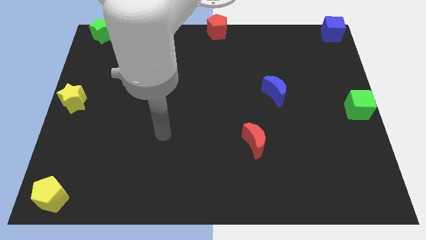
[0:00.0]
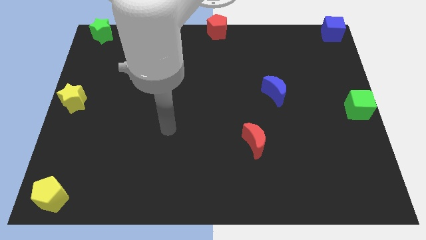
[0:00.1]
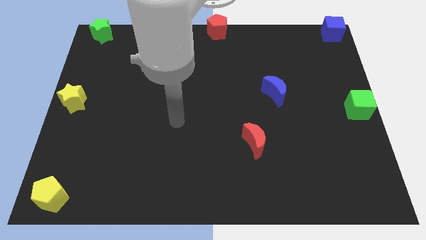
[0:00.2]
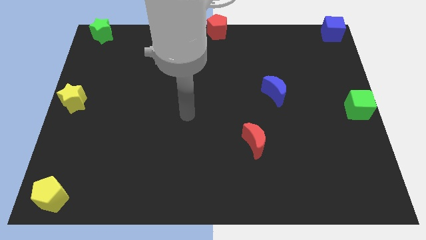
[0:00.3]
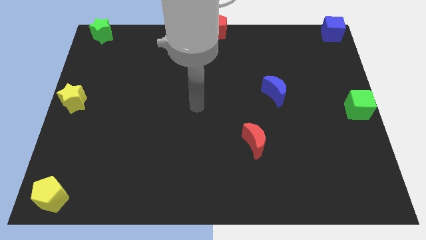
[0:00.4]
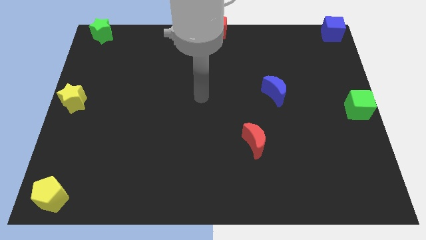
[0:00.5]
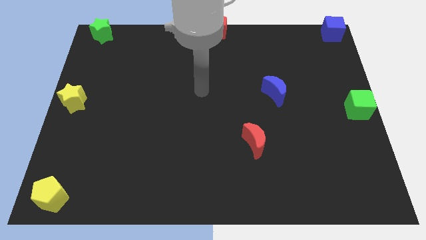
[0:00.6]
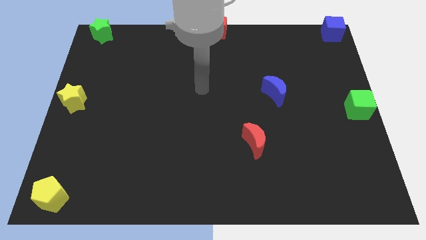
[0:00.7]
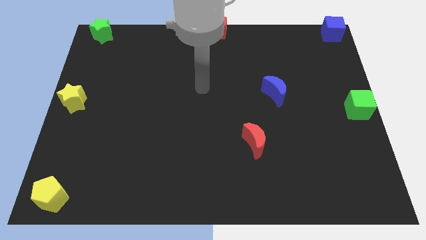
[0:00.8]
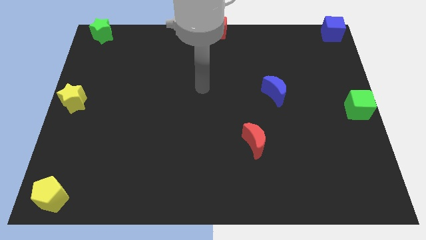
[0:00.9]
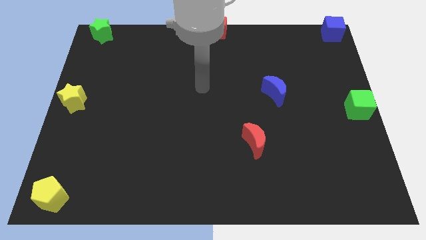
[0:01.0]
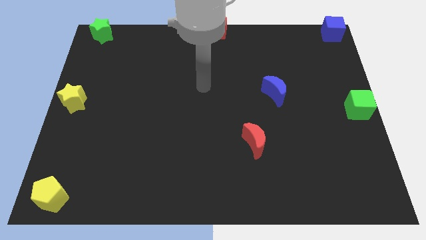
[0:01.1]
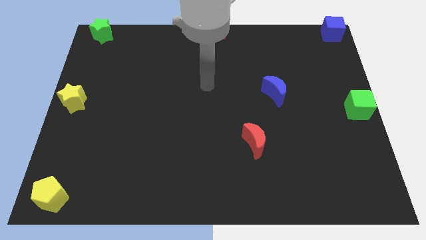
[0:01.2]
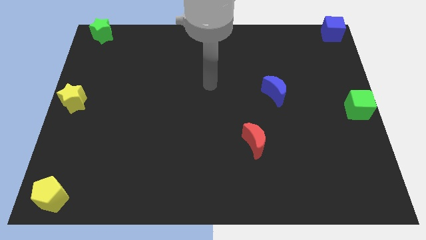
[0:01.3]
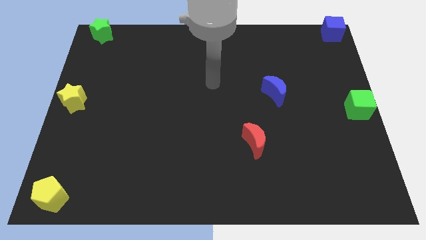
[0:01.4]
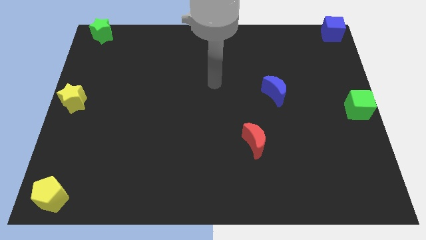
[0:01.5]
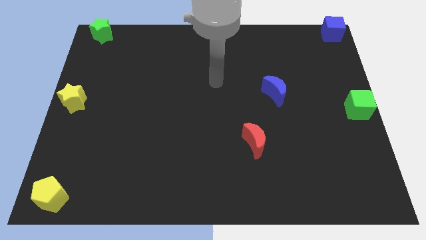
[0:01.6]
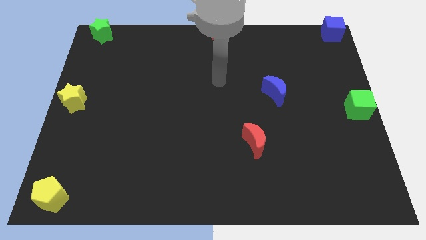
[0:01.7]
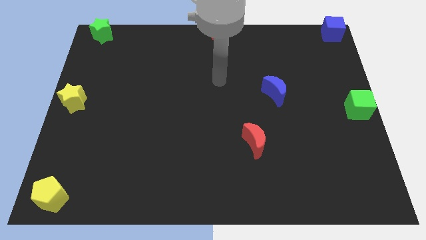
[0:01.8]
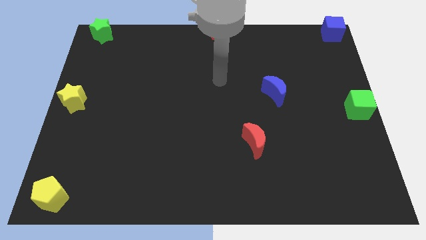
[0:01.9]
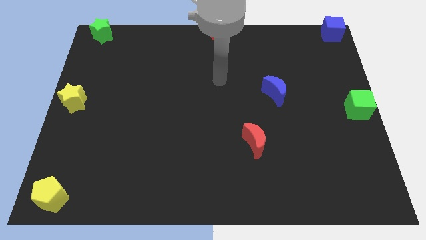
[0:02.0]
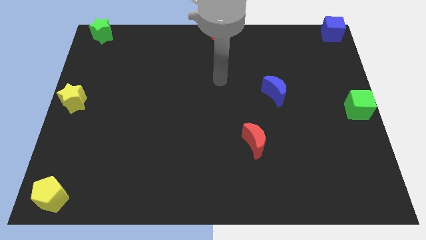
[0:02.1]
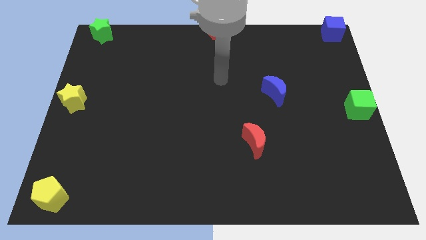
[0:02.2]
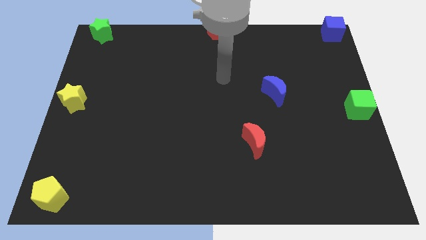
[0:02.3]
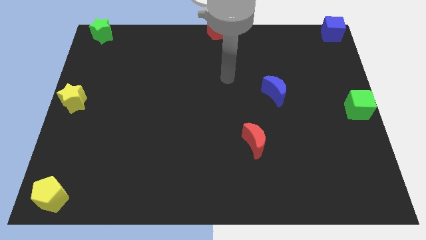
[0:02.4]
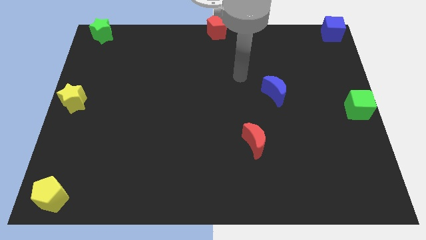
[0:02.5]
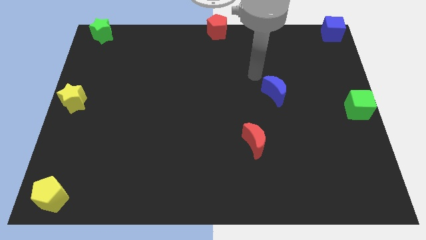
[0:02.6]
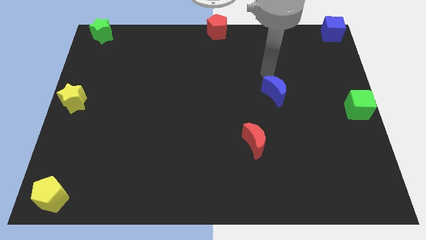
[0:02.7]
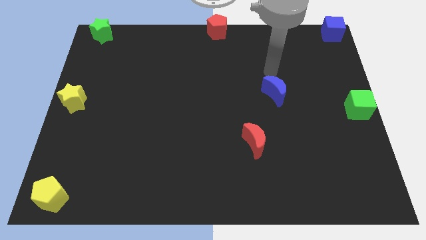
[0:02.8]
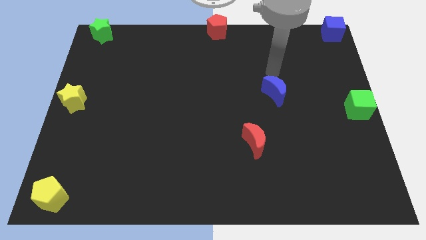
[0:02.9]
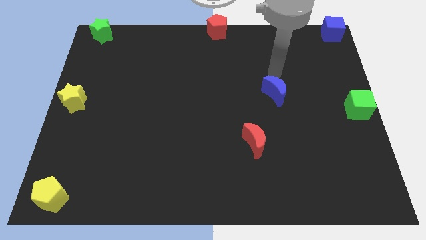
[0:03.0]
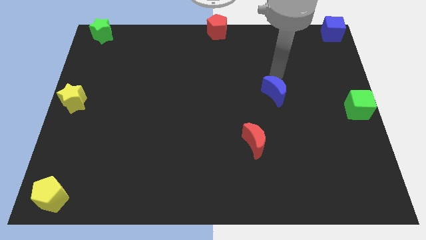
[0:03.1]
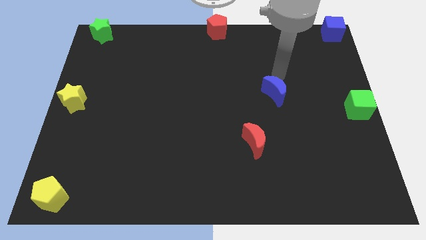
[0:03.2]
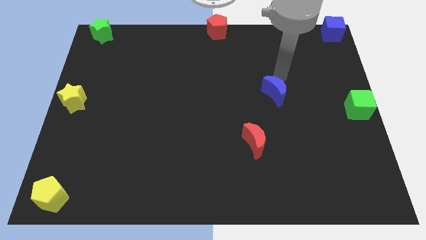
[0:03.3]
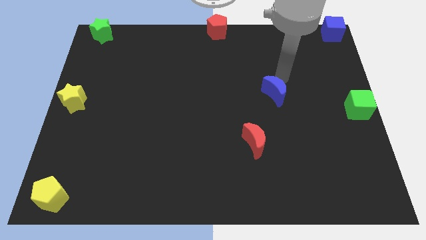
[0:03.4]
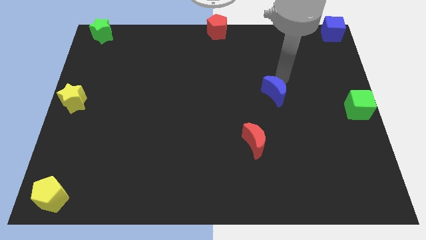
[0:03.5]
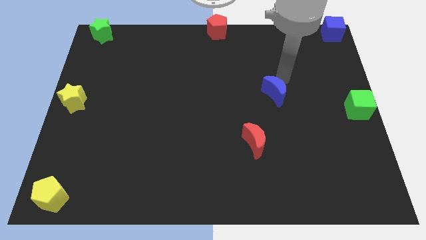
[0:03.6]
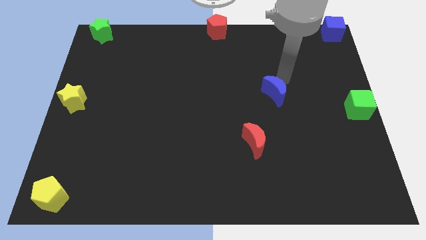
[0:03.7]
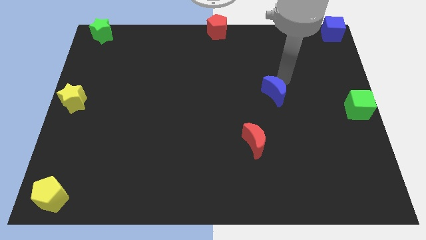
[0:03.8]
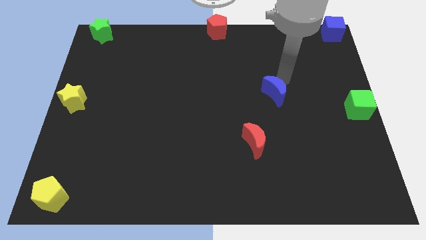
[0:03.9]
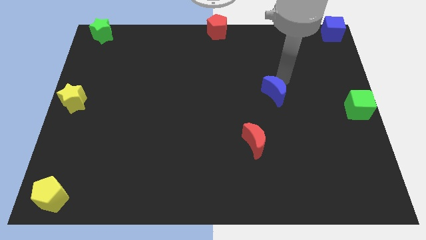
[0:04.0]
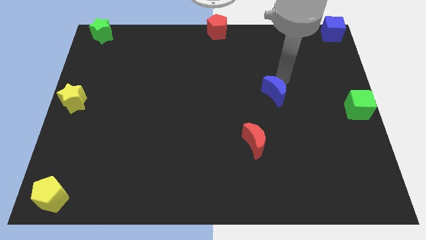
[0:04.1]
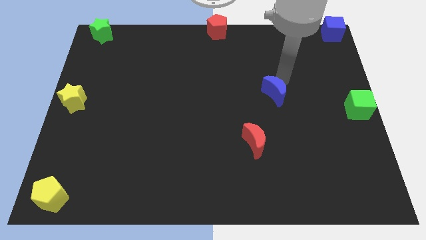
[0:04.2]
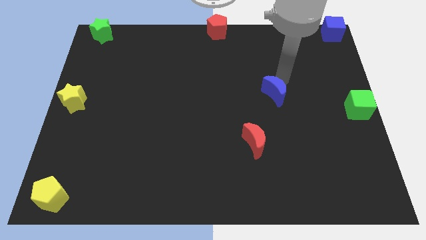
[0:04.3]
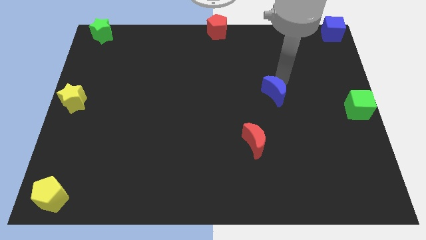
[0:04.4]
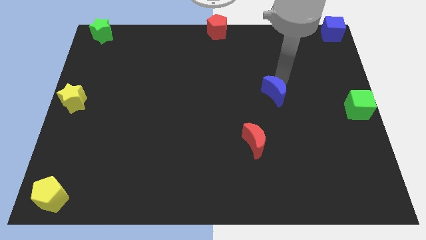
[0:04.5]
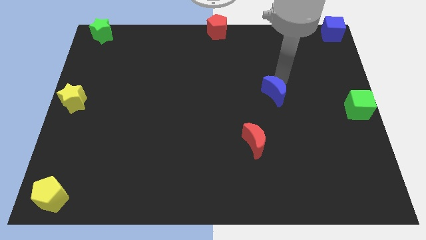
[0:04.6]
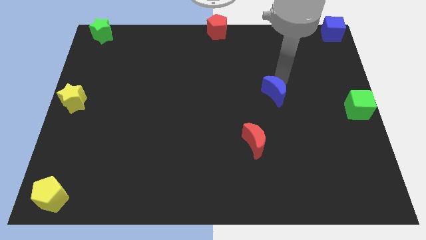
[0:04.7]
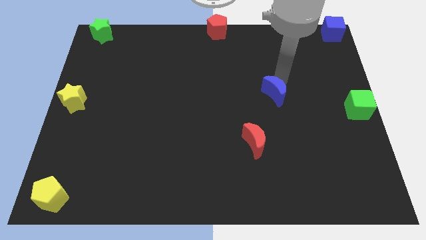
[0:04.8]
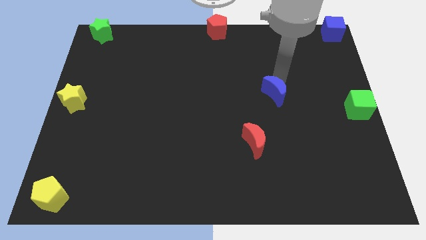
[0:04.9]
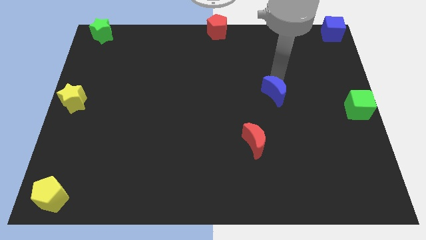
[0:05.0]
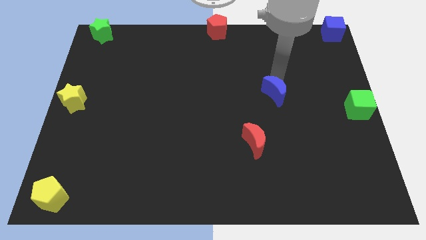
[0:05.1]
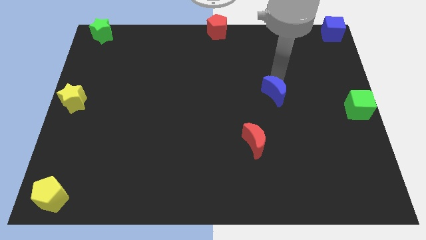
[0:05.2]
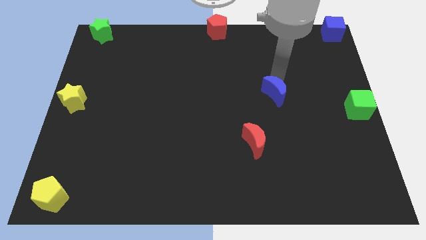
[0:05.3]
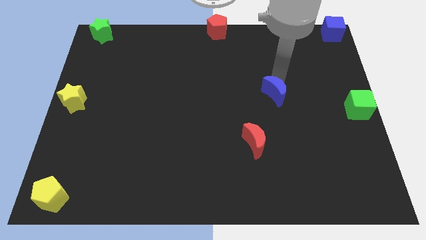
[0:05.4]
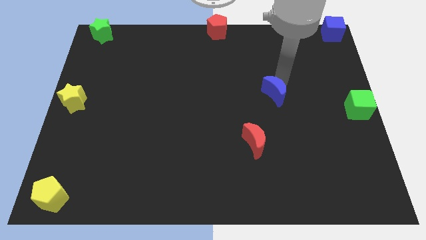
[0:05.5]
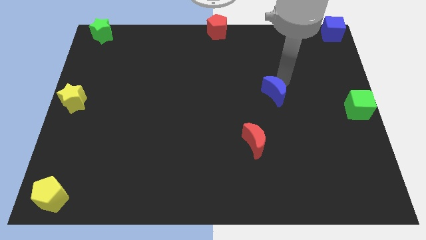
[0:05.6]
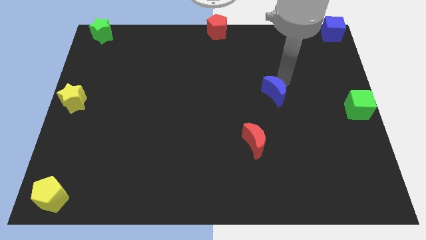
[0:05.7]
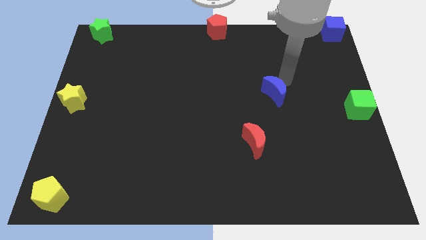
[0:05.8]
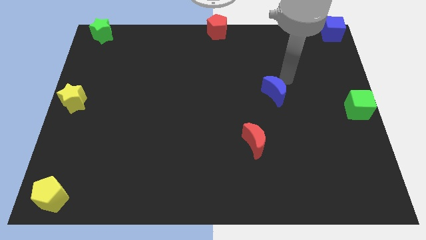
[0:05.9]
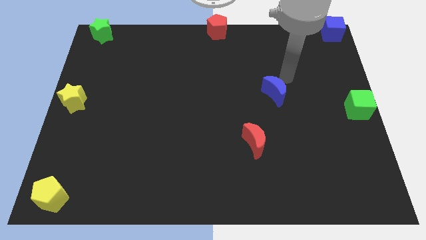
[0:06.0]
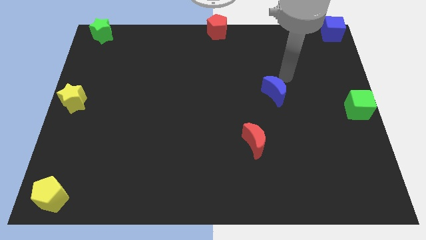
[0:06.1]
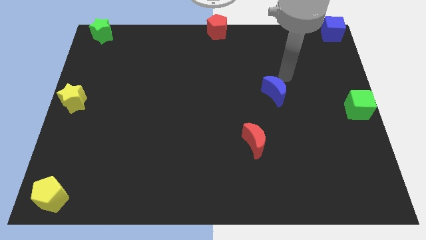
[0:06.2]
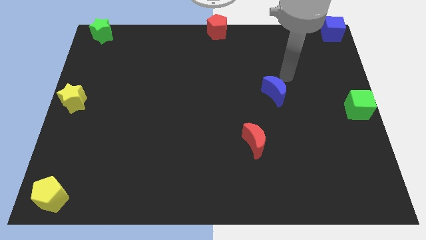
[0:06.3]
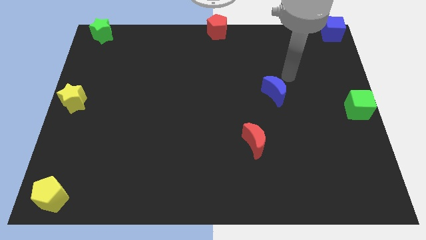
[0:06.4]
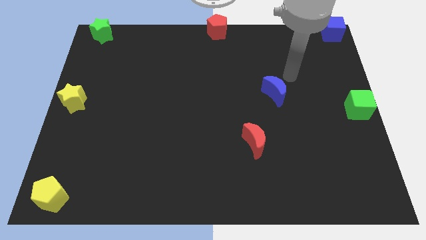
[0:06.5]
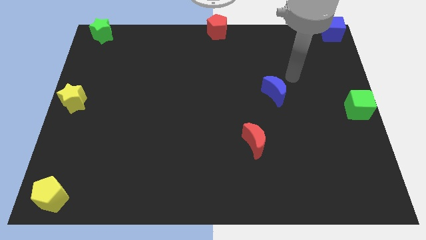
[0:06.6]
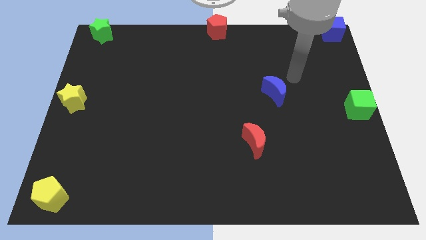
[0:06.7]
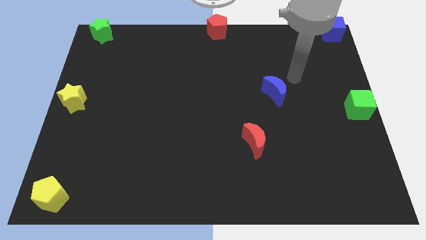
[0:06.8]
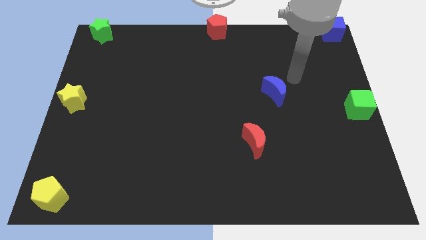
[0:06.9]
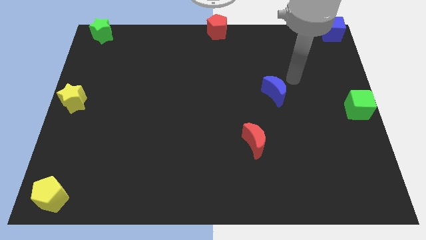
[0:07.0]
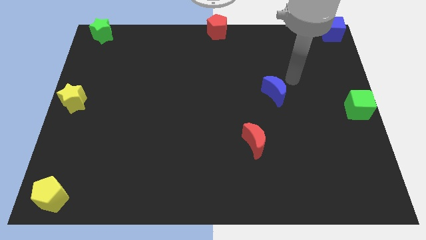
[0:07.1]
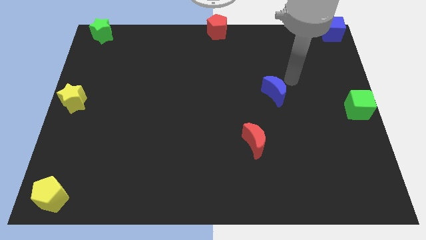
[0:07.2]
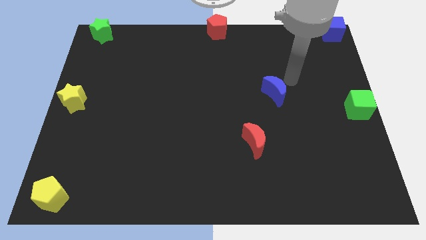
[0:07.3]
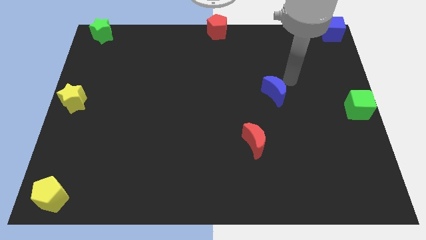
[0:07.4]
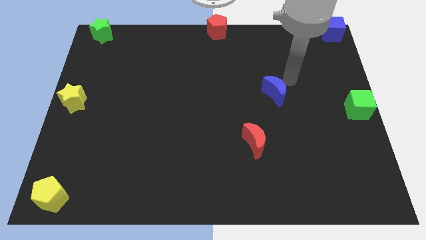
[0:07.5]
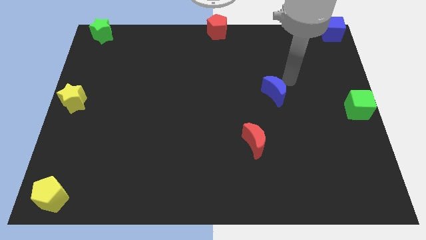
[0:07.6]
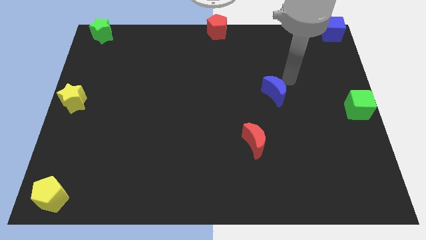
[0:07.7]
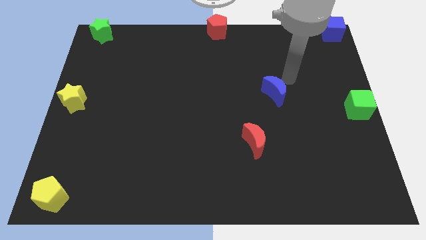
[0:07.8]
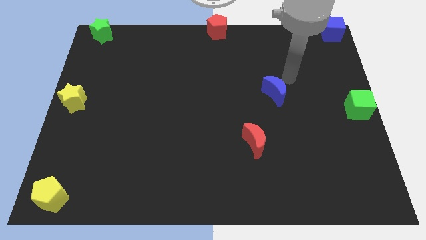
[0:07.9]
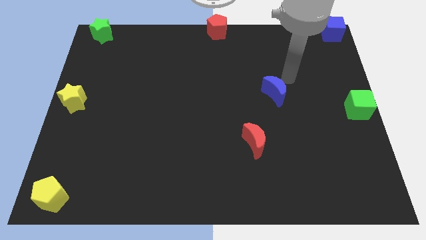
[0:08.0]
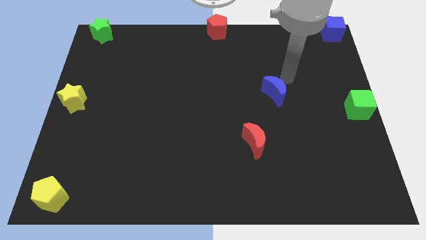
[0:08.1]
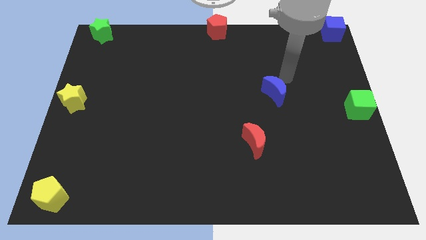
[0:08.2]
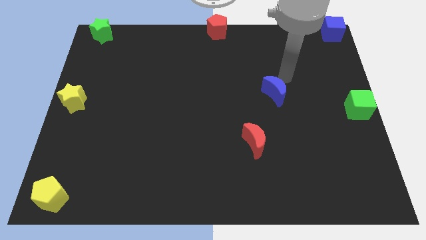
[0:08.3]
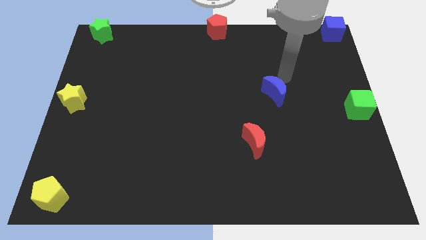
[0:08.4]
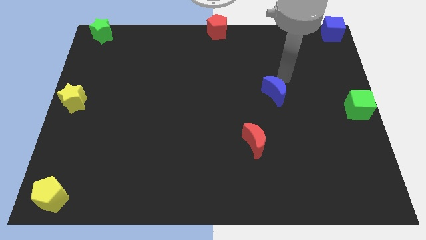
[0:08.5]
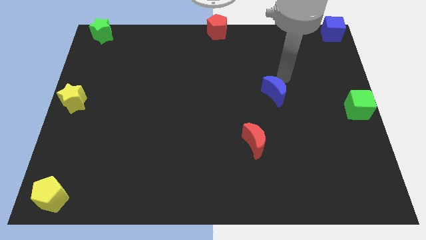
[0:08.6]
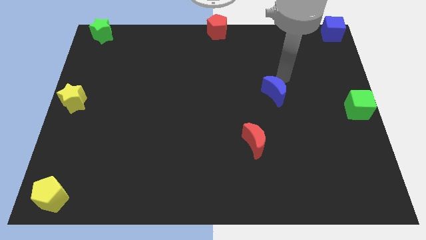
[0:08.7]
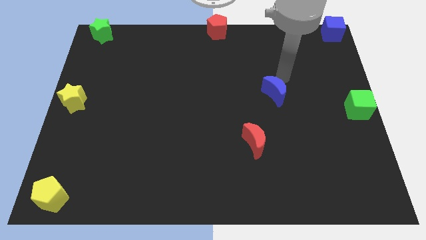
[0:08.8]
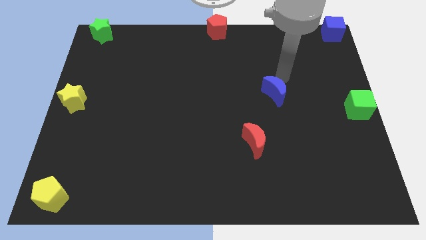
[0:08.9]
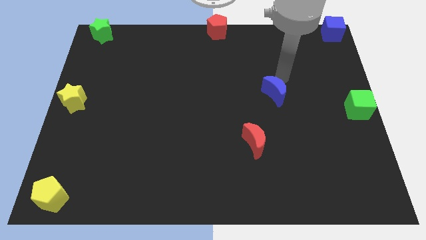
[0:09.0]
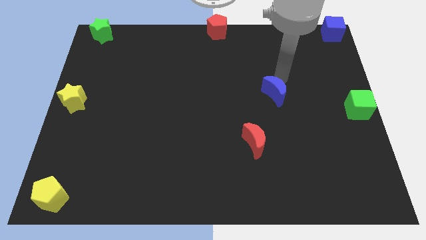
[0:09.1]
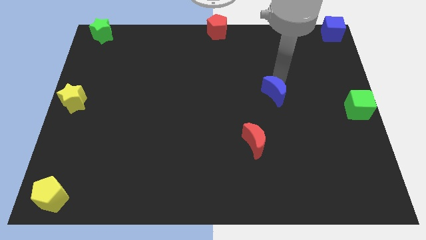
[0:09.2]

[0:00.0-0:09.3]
move the arm to the top right of the blue crescent
